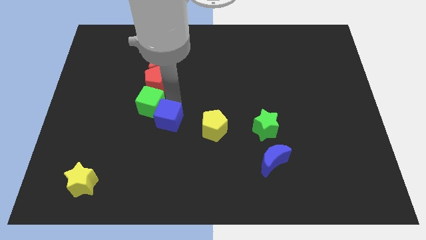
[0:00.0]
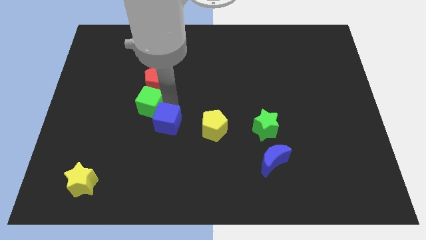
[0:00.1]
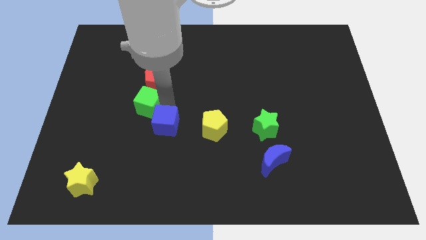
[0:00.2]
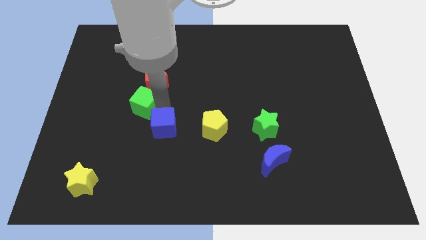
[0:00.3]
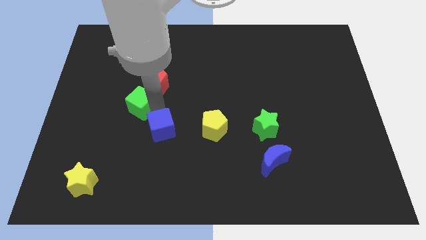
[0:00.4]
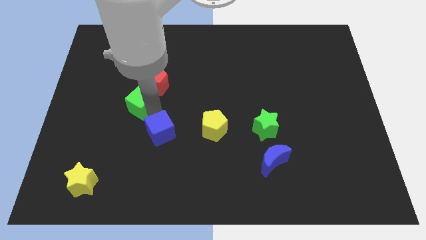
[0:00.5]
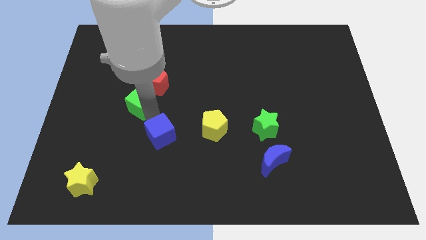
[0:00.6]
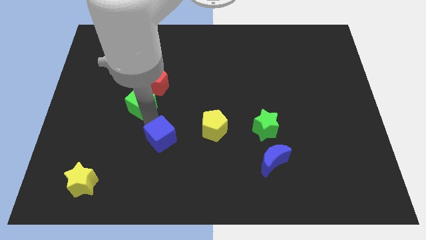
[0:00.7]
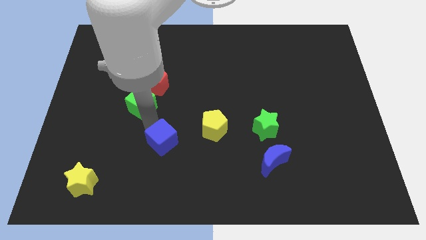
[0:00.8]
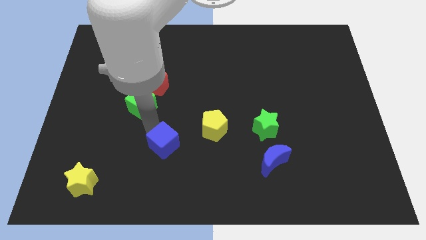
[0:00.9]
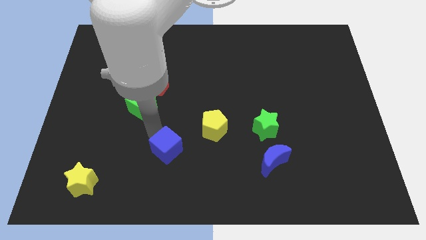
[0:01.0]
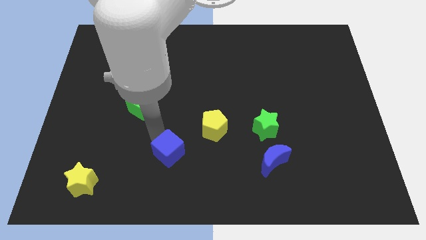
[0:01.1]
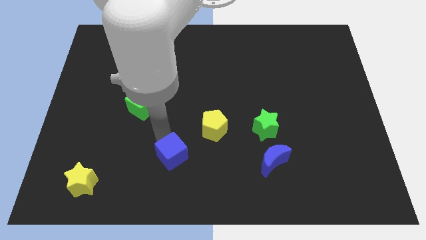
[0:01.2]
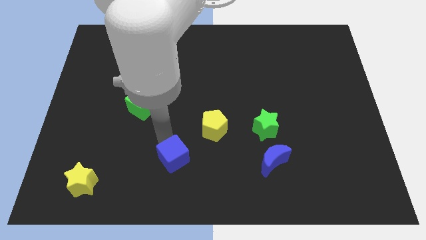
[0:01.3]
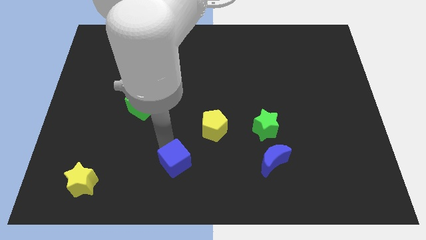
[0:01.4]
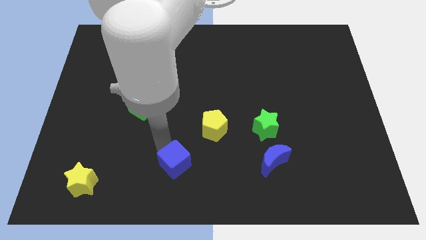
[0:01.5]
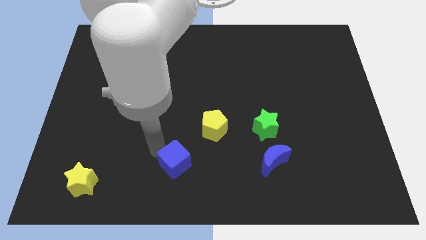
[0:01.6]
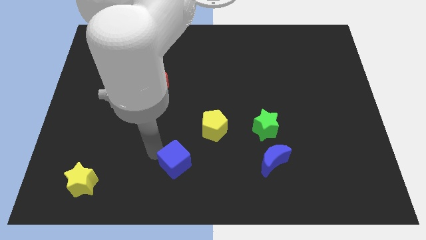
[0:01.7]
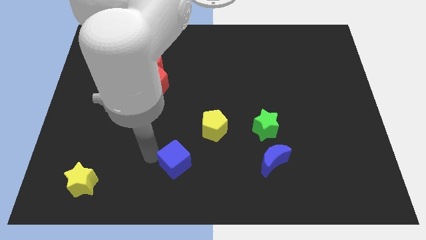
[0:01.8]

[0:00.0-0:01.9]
move the blue cube parallel to the left of the blue crescent

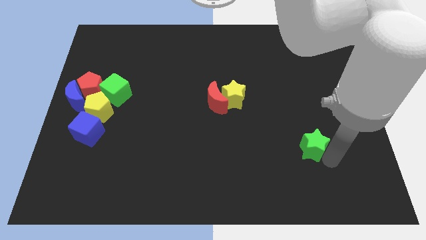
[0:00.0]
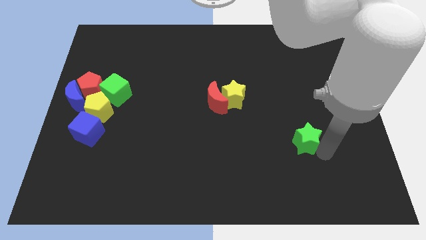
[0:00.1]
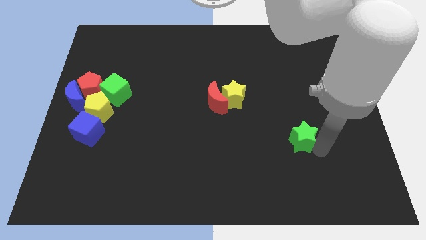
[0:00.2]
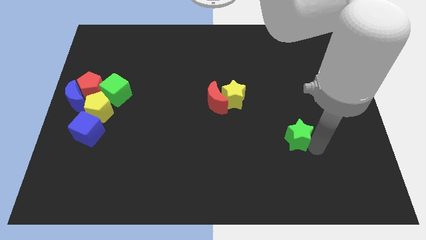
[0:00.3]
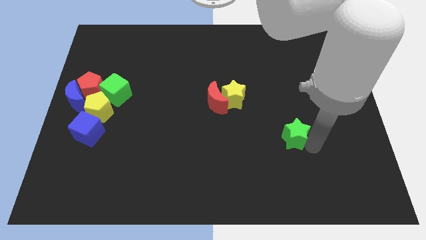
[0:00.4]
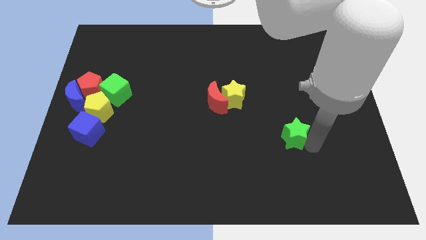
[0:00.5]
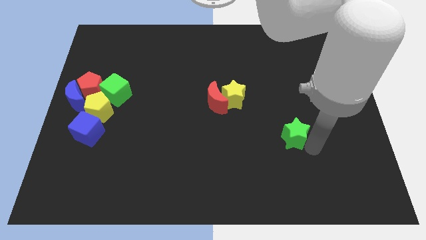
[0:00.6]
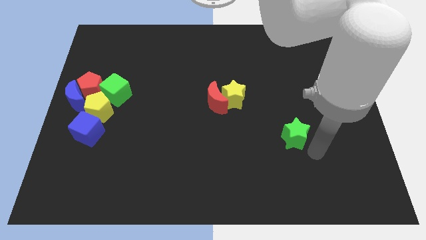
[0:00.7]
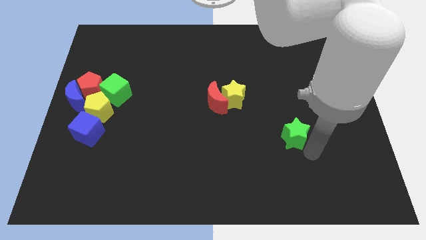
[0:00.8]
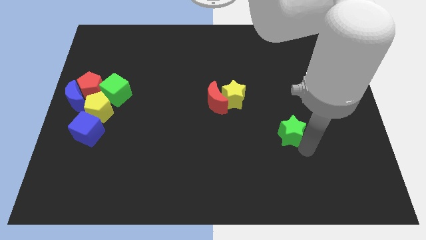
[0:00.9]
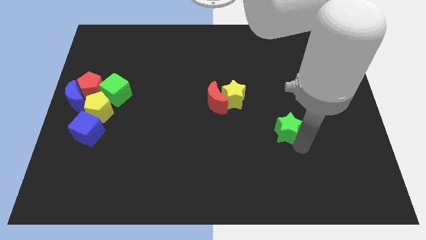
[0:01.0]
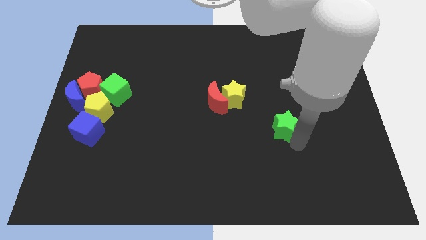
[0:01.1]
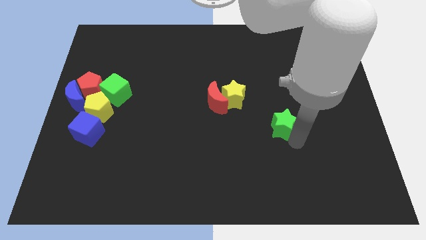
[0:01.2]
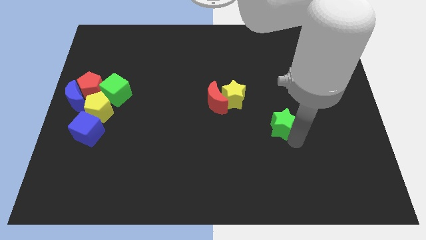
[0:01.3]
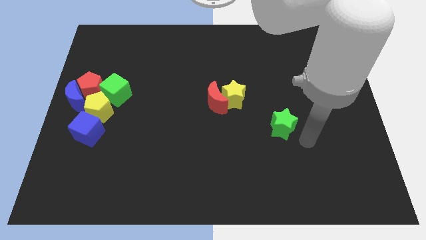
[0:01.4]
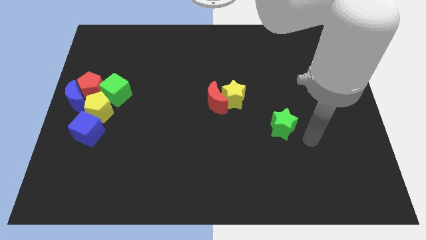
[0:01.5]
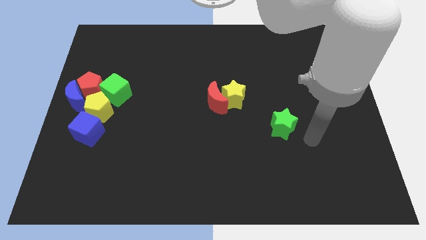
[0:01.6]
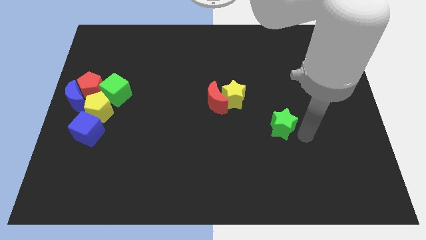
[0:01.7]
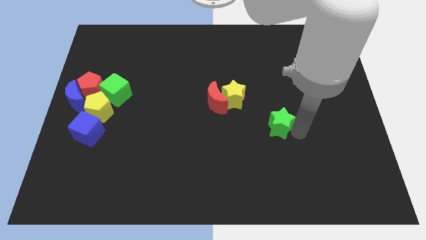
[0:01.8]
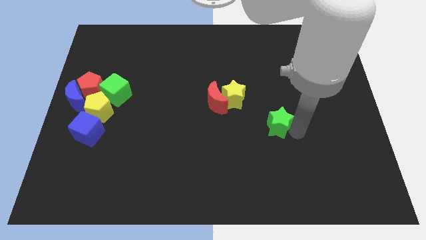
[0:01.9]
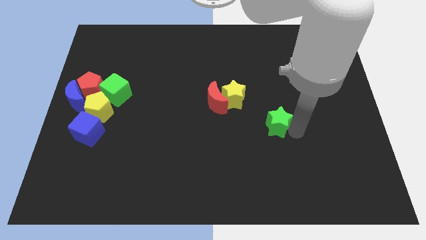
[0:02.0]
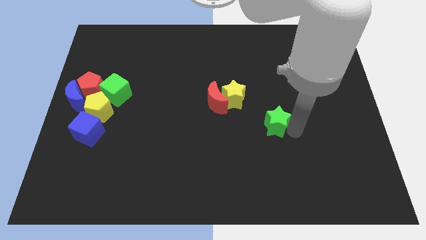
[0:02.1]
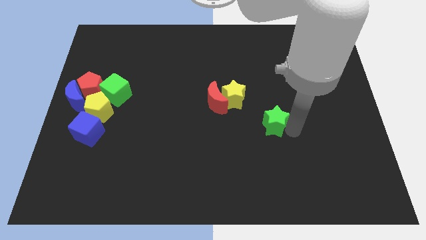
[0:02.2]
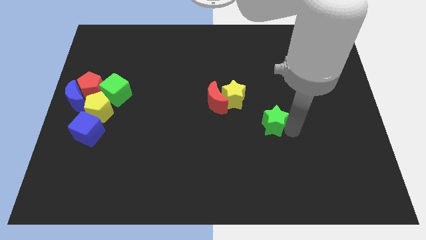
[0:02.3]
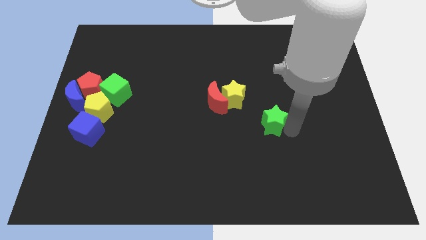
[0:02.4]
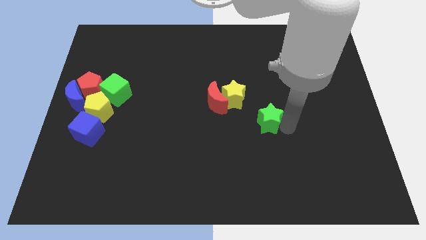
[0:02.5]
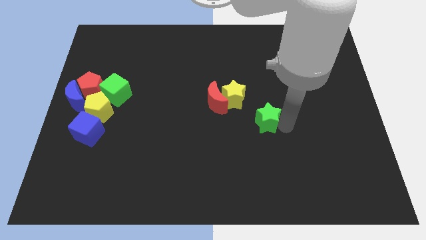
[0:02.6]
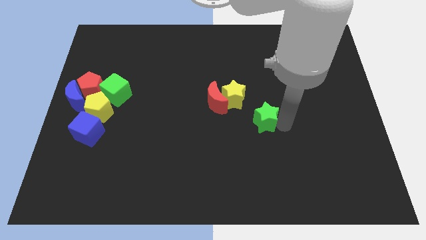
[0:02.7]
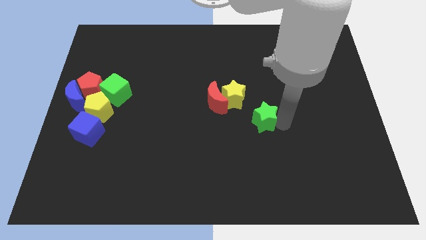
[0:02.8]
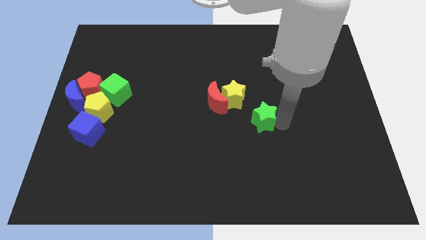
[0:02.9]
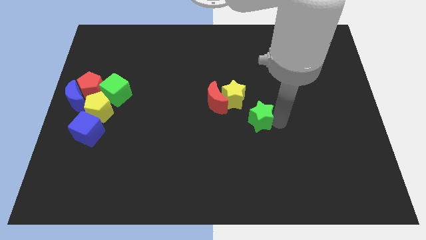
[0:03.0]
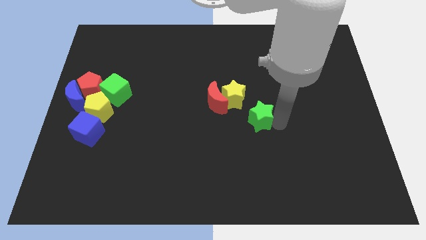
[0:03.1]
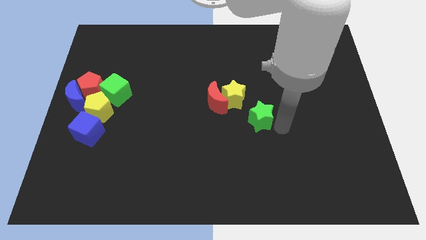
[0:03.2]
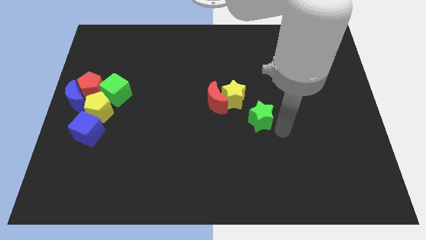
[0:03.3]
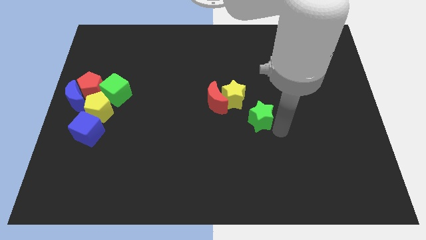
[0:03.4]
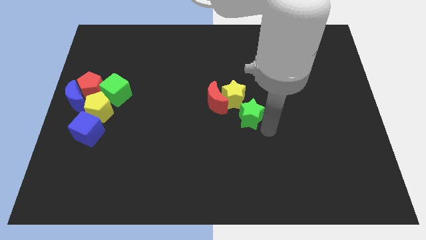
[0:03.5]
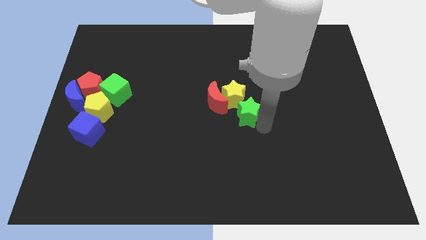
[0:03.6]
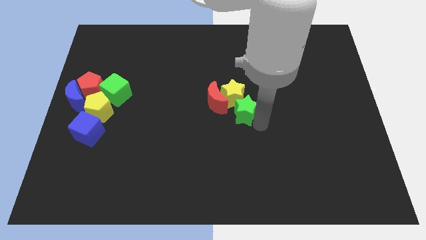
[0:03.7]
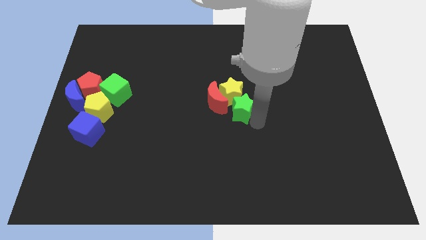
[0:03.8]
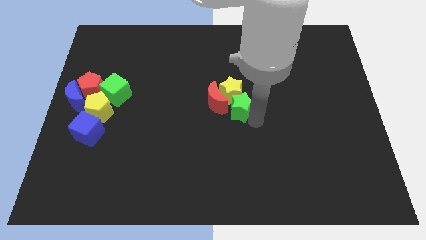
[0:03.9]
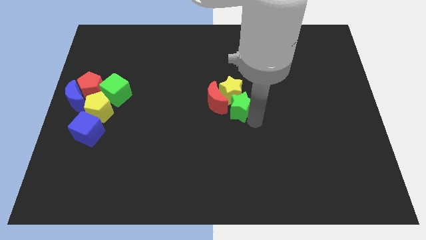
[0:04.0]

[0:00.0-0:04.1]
move the green star into the yellow star and red moon

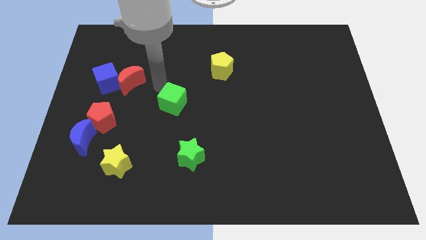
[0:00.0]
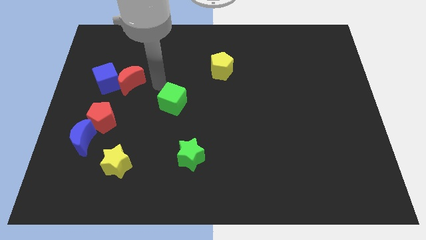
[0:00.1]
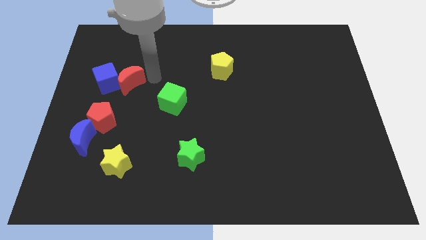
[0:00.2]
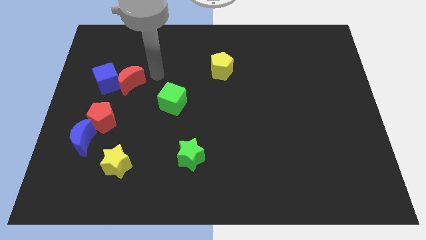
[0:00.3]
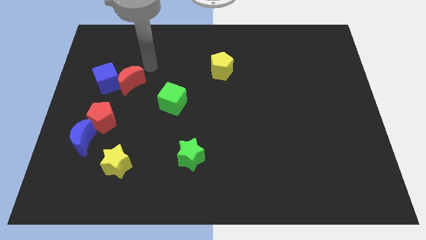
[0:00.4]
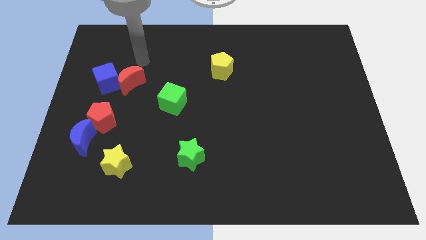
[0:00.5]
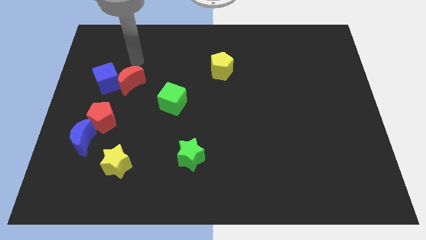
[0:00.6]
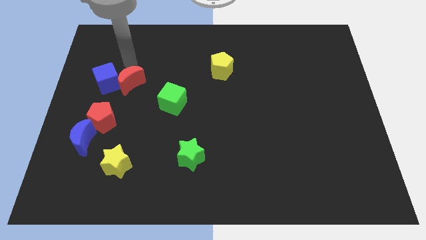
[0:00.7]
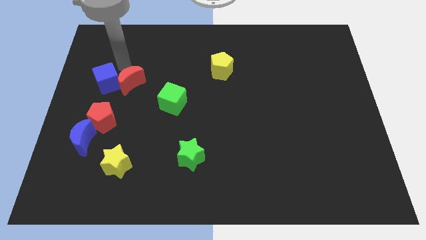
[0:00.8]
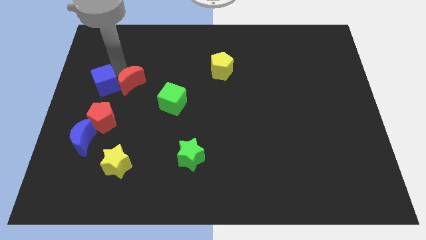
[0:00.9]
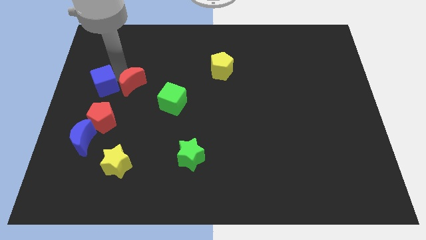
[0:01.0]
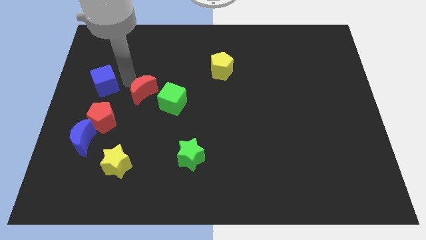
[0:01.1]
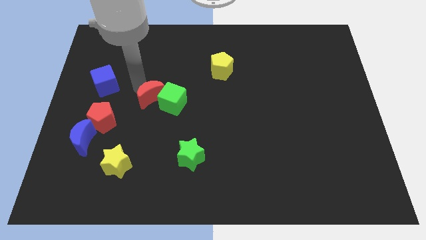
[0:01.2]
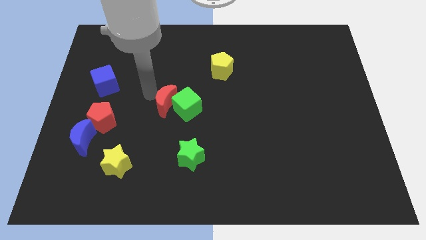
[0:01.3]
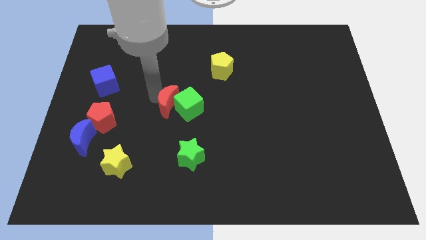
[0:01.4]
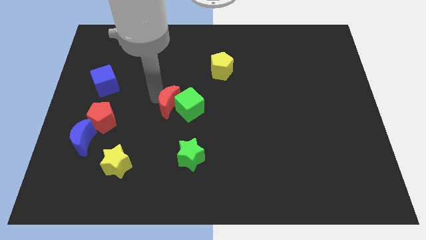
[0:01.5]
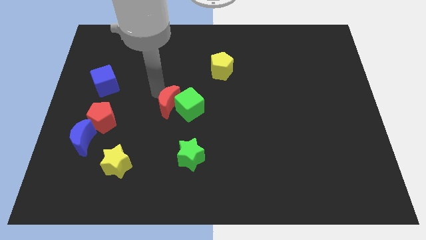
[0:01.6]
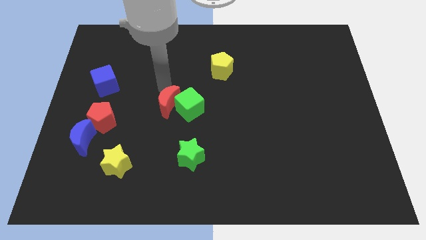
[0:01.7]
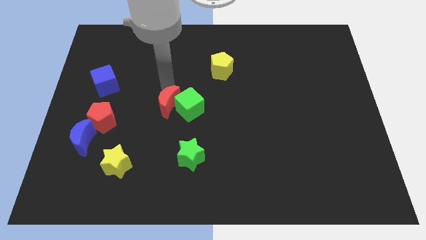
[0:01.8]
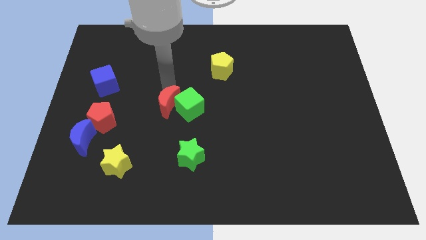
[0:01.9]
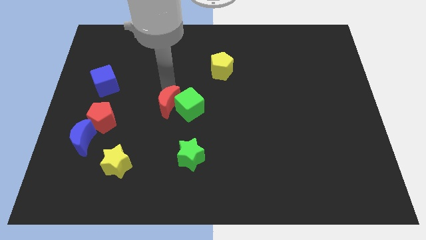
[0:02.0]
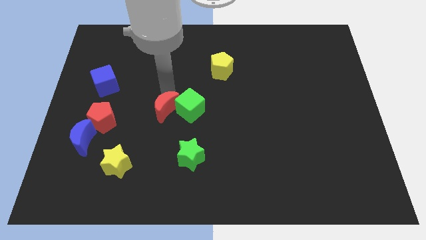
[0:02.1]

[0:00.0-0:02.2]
push the red moon into green cube to the left

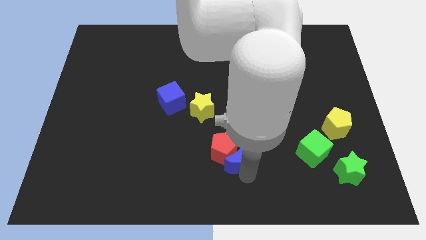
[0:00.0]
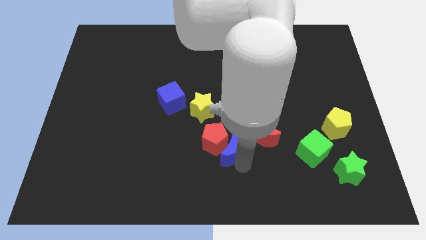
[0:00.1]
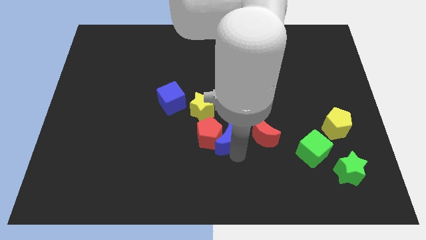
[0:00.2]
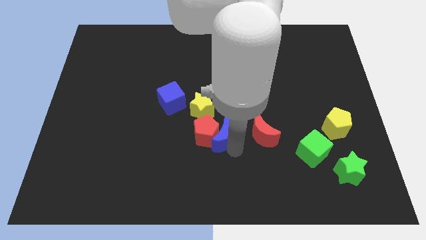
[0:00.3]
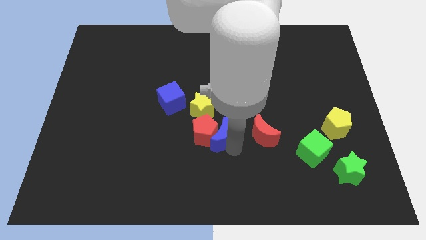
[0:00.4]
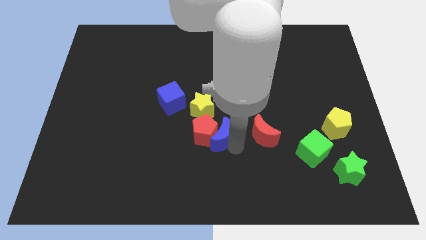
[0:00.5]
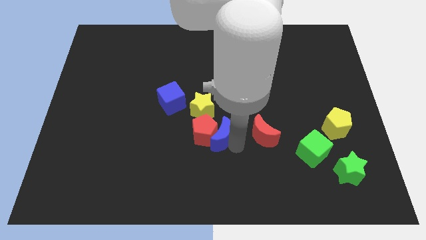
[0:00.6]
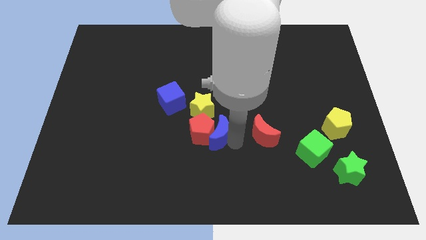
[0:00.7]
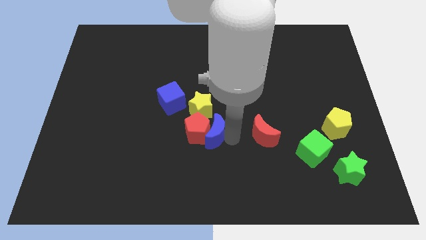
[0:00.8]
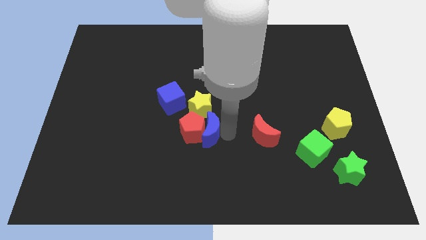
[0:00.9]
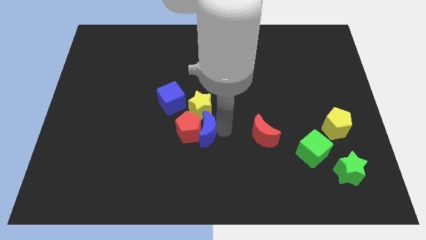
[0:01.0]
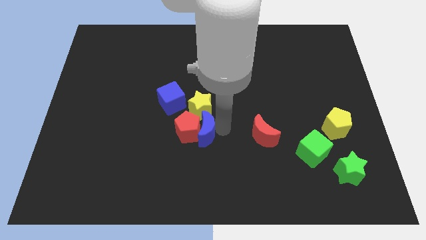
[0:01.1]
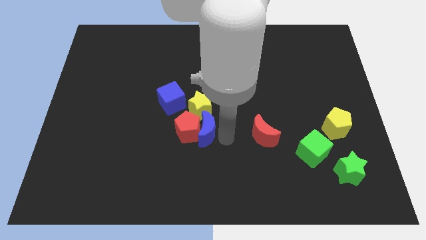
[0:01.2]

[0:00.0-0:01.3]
move red pentagon and blue moon below yellow star
